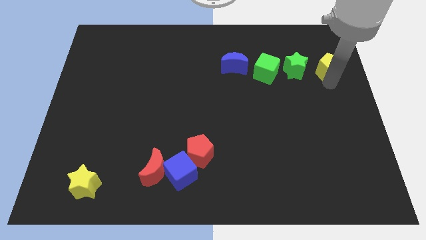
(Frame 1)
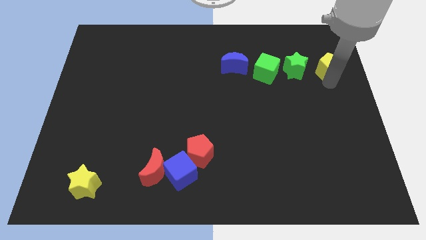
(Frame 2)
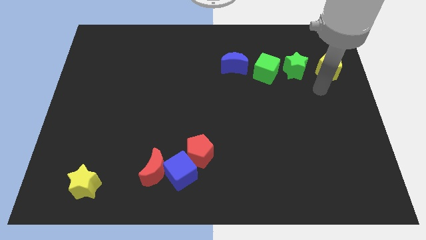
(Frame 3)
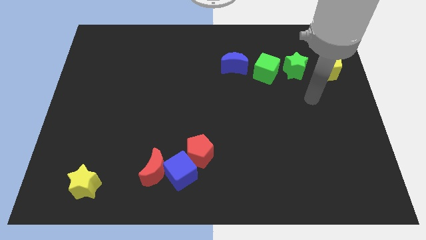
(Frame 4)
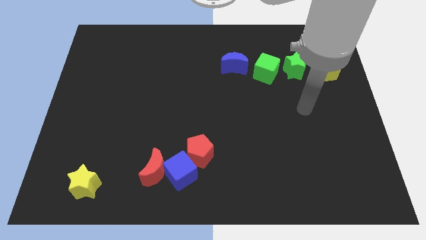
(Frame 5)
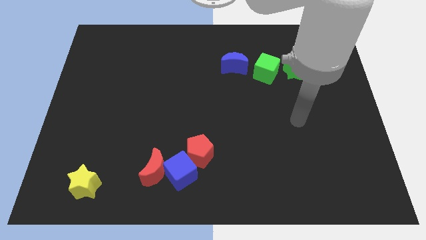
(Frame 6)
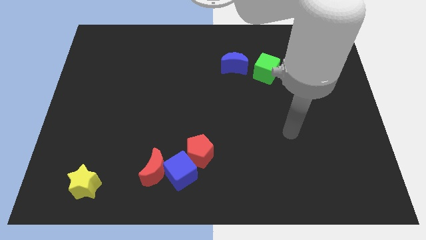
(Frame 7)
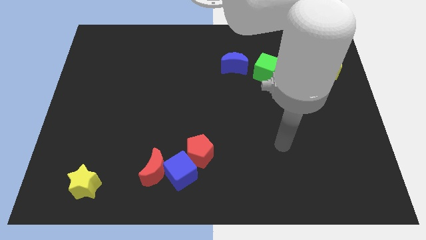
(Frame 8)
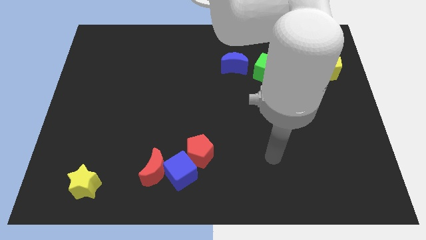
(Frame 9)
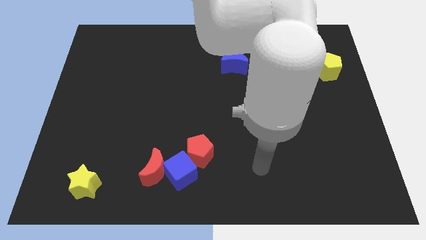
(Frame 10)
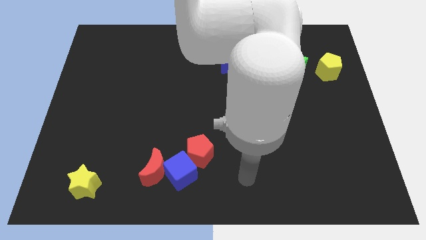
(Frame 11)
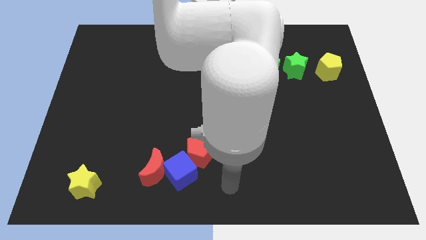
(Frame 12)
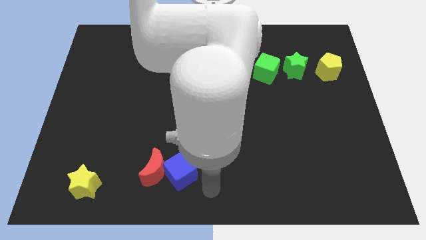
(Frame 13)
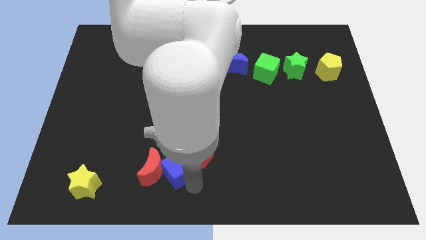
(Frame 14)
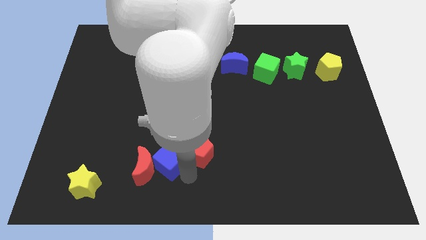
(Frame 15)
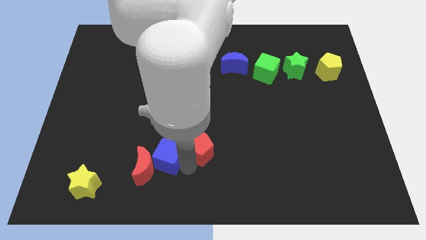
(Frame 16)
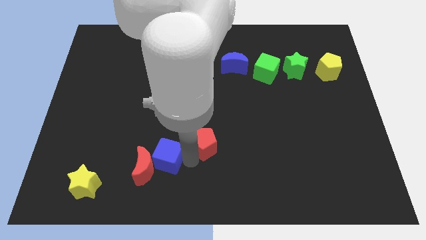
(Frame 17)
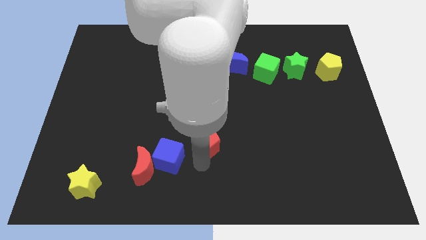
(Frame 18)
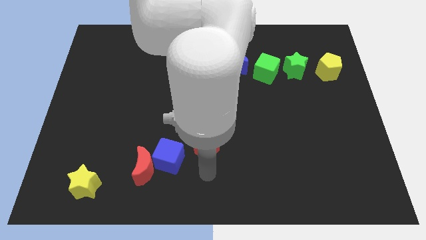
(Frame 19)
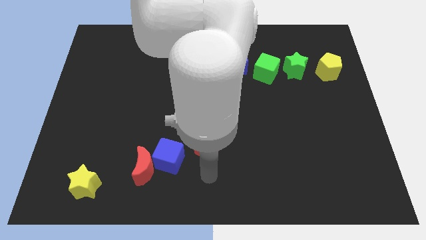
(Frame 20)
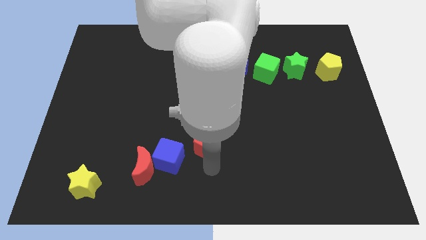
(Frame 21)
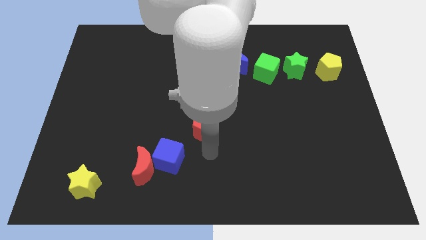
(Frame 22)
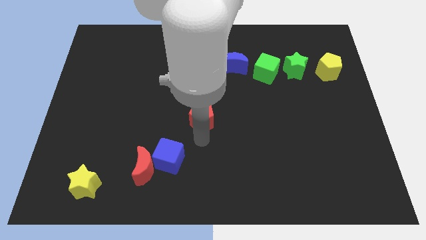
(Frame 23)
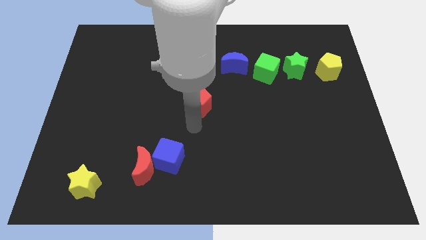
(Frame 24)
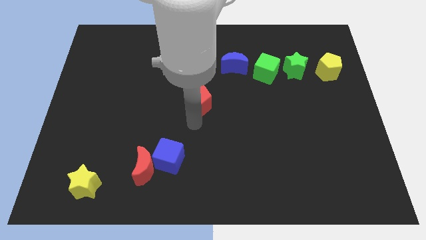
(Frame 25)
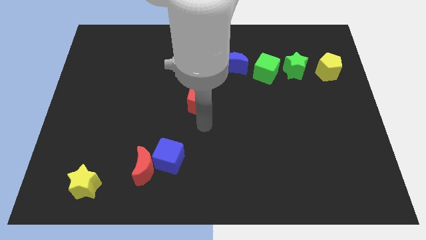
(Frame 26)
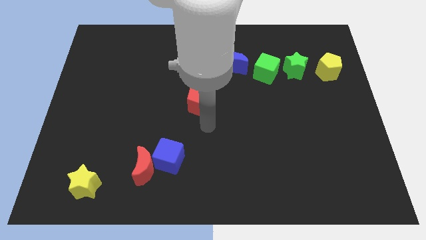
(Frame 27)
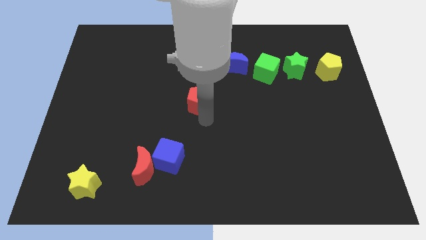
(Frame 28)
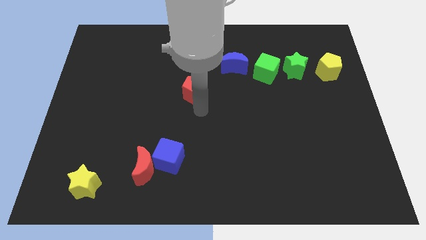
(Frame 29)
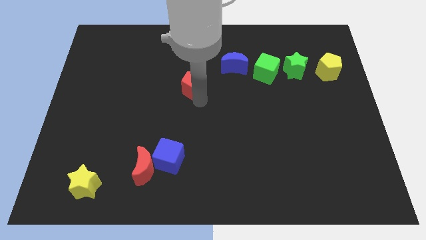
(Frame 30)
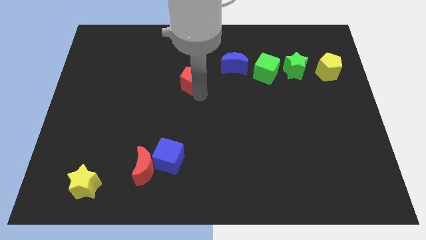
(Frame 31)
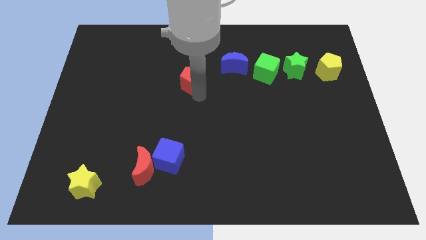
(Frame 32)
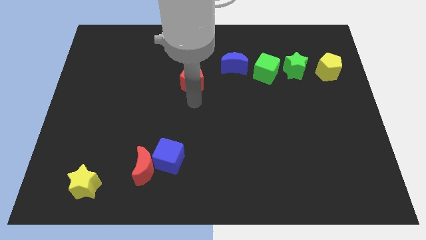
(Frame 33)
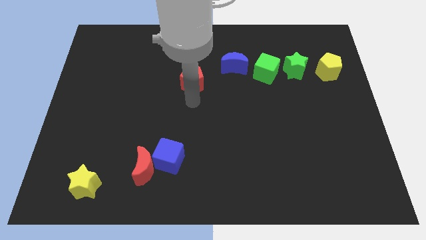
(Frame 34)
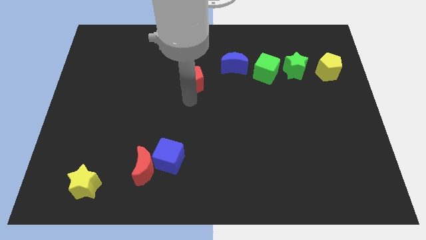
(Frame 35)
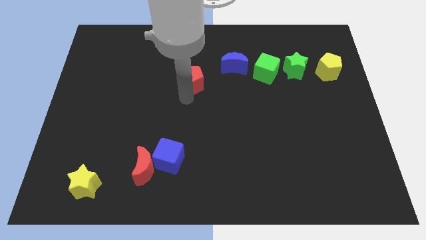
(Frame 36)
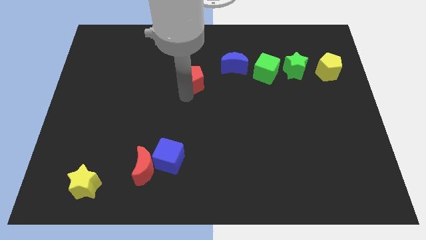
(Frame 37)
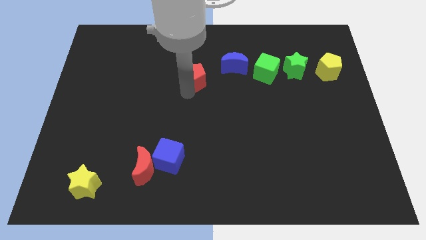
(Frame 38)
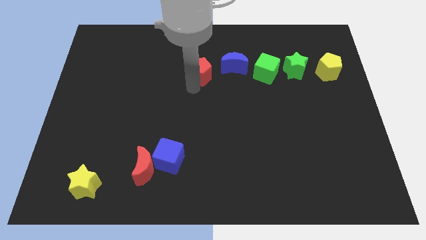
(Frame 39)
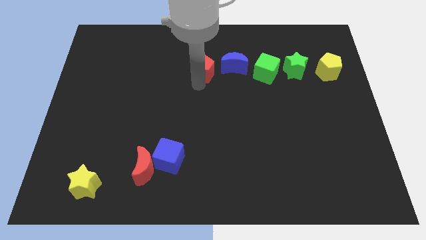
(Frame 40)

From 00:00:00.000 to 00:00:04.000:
place the red pentagon left to the blue moon

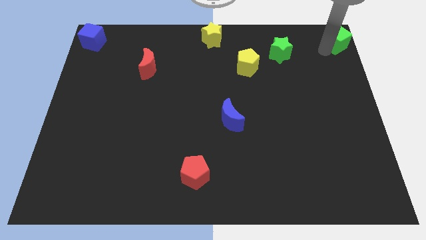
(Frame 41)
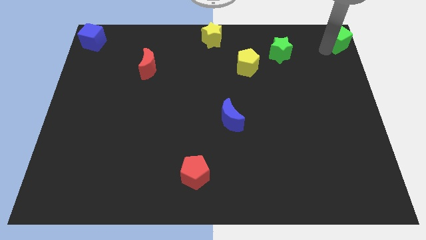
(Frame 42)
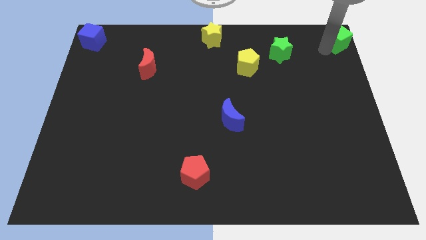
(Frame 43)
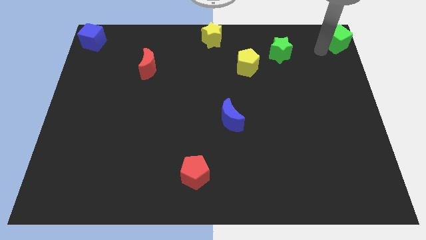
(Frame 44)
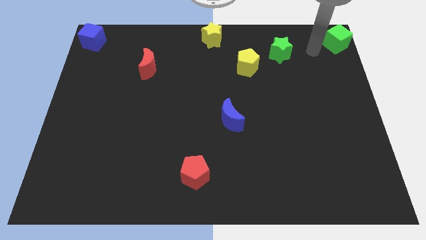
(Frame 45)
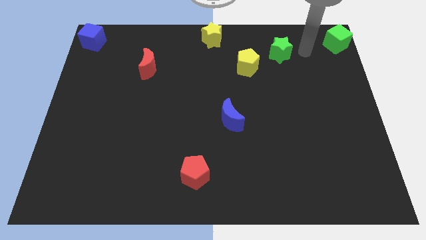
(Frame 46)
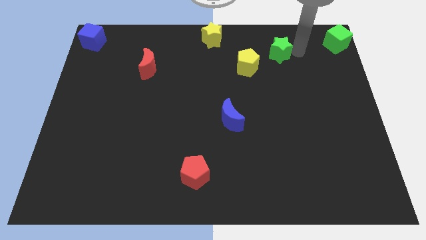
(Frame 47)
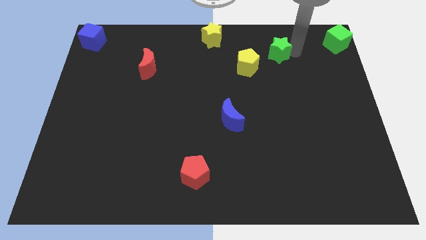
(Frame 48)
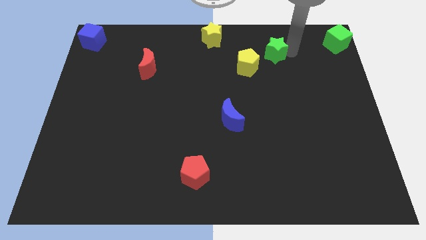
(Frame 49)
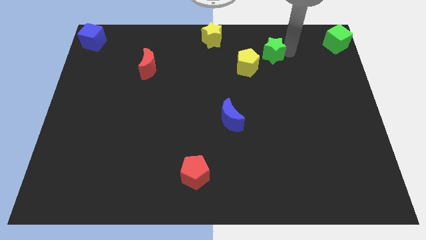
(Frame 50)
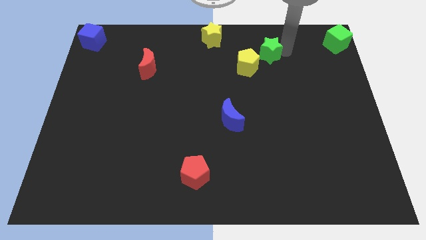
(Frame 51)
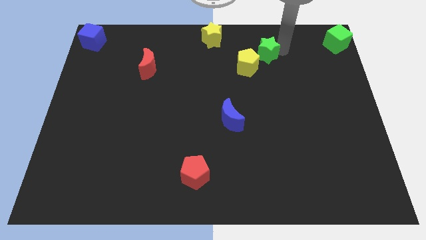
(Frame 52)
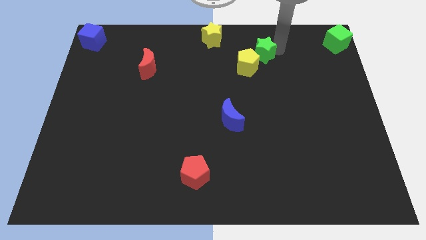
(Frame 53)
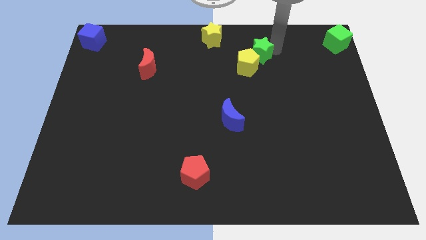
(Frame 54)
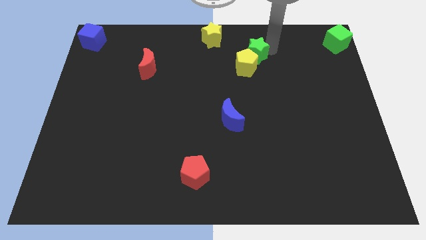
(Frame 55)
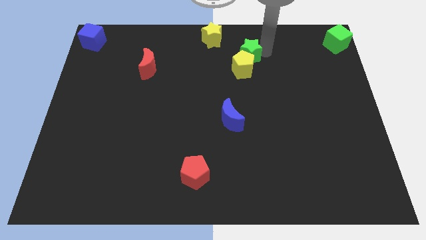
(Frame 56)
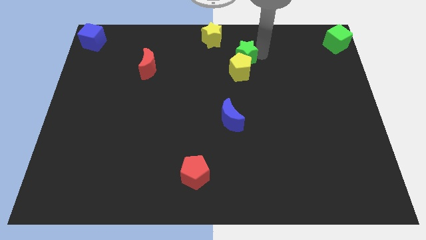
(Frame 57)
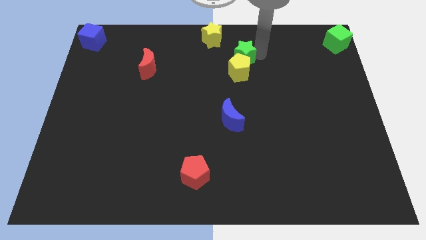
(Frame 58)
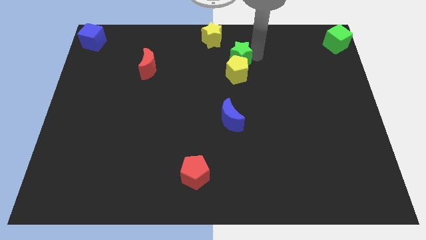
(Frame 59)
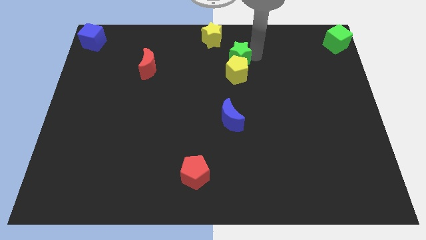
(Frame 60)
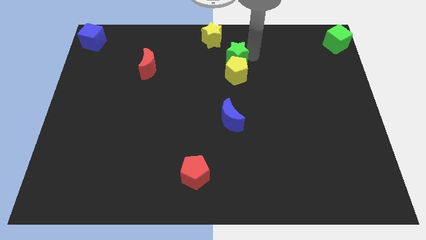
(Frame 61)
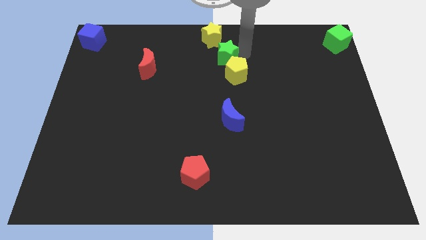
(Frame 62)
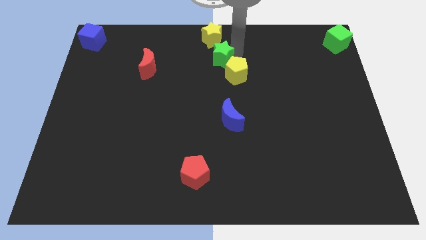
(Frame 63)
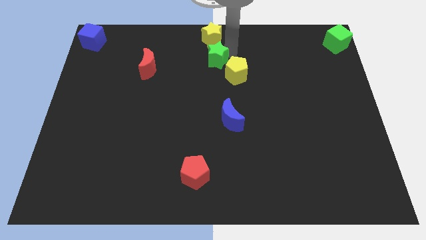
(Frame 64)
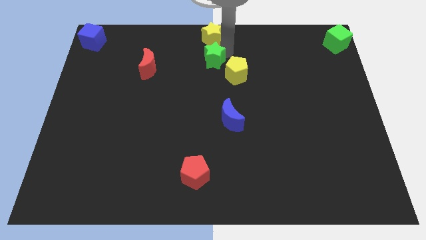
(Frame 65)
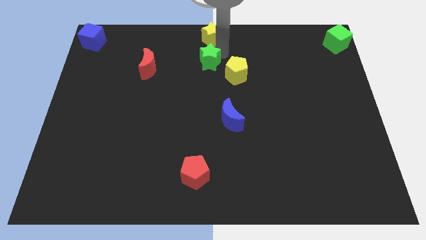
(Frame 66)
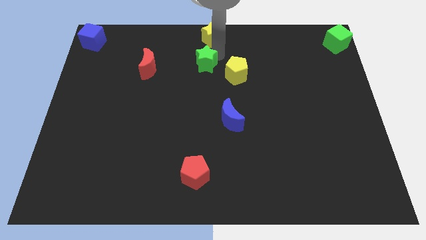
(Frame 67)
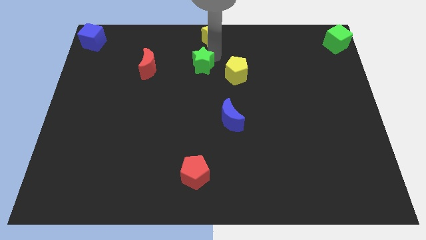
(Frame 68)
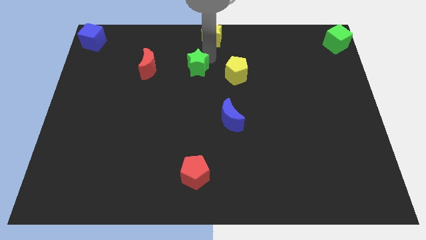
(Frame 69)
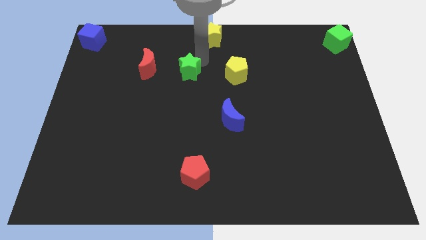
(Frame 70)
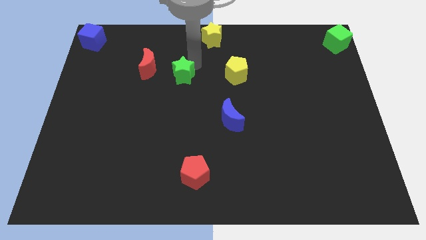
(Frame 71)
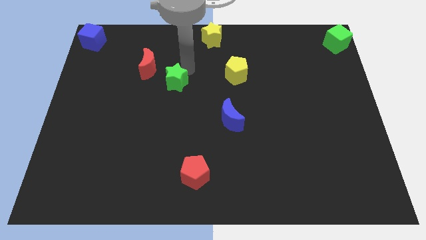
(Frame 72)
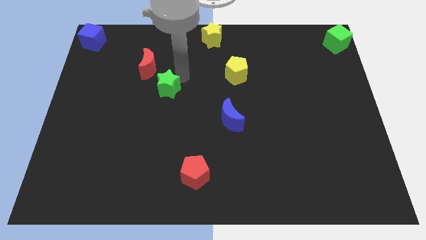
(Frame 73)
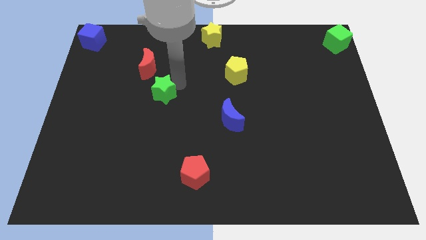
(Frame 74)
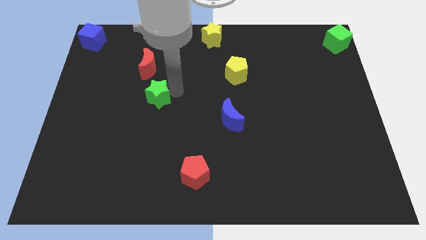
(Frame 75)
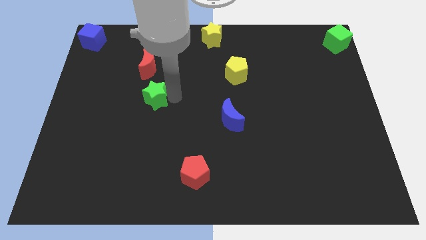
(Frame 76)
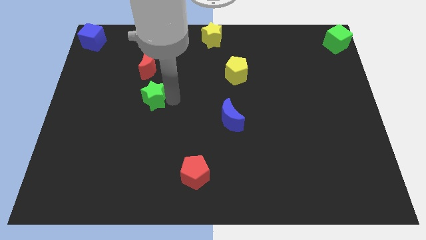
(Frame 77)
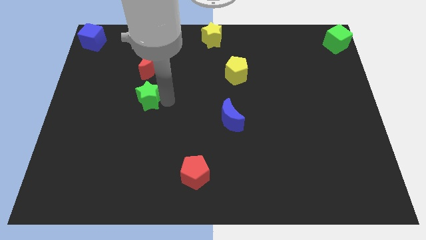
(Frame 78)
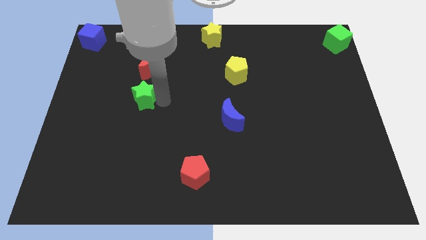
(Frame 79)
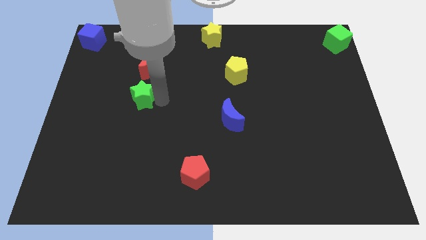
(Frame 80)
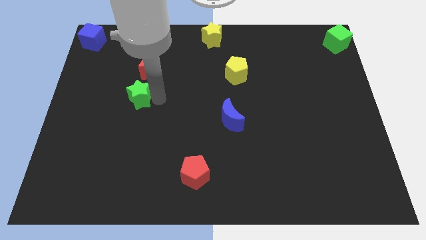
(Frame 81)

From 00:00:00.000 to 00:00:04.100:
move the green star below the red moon
